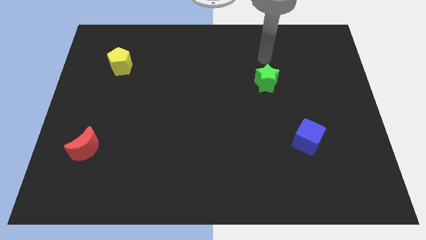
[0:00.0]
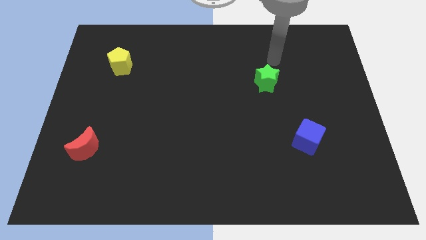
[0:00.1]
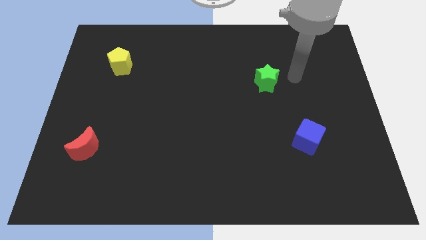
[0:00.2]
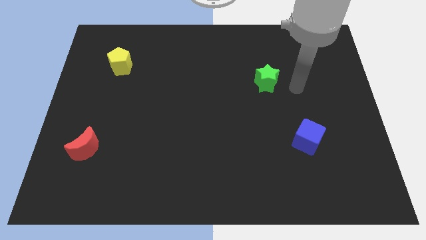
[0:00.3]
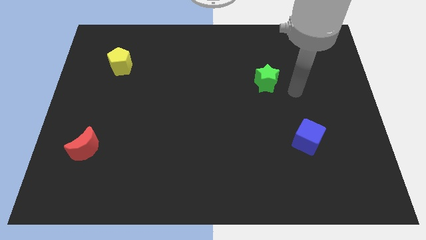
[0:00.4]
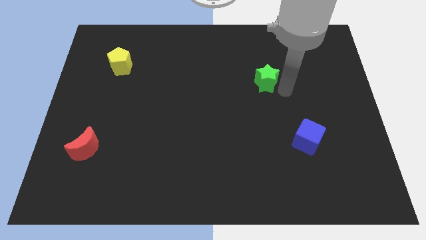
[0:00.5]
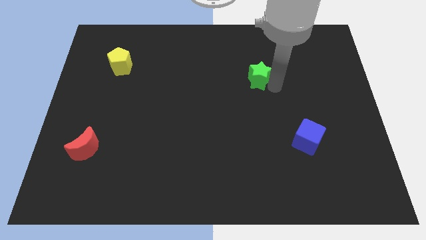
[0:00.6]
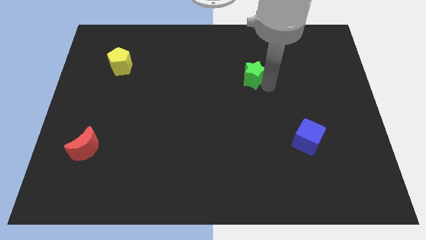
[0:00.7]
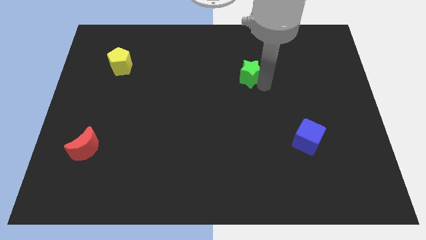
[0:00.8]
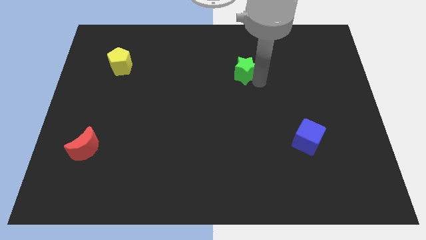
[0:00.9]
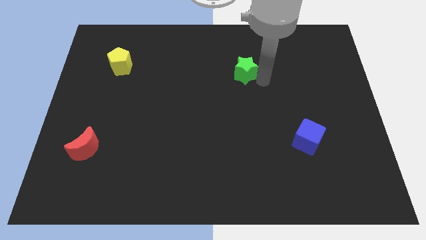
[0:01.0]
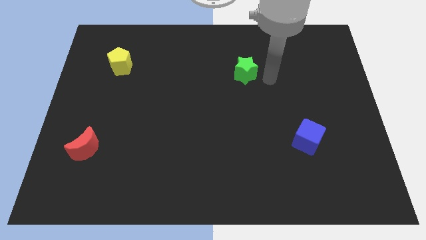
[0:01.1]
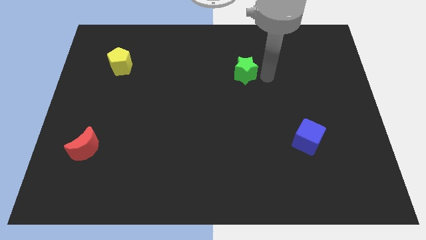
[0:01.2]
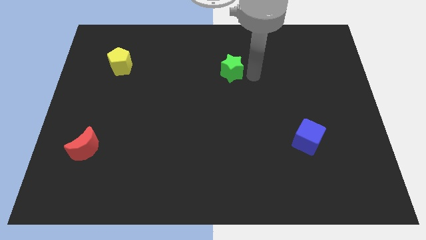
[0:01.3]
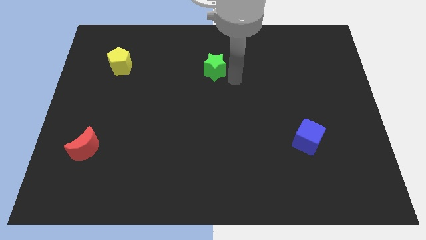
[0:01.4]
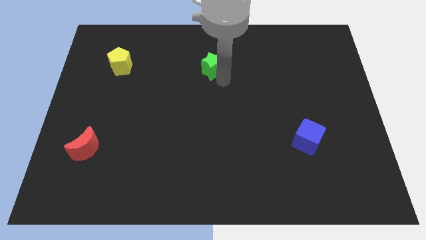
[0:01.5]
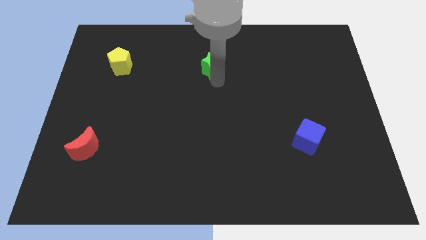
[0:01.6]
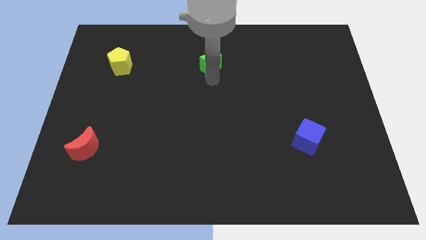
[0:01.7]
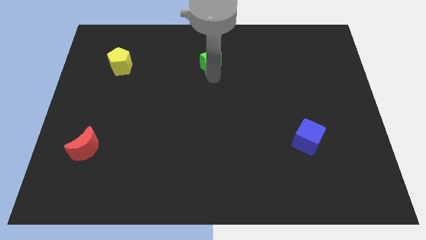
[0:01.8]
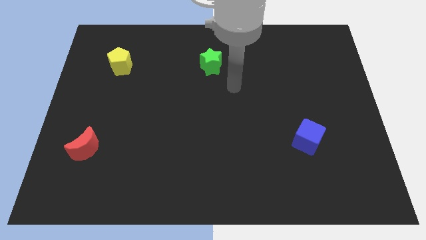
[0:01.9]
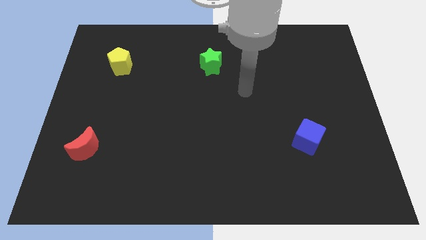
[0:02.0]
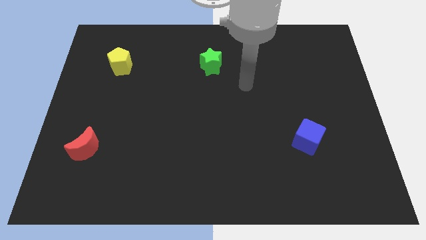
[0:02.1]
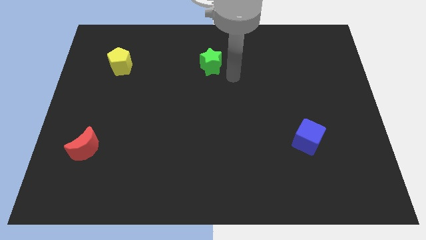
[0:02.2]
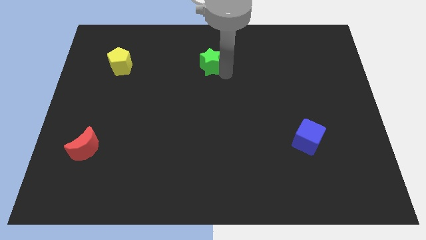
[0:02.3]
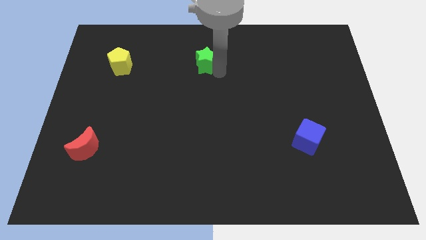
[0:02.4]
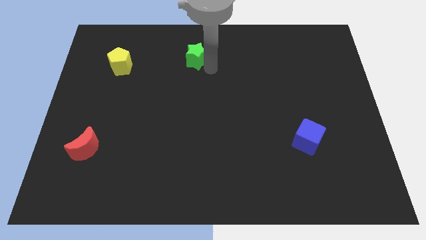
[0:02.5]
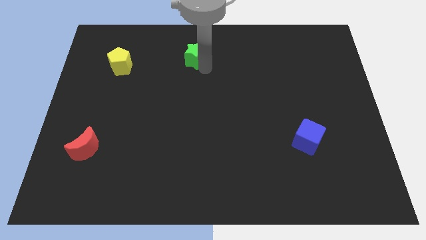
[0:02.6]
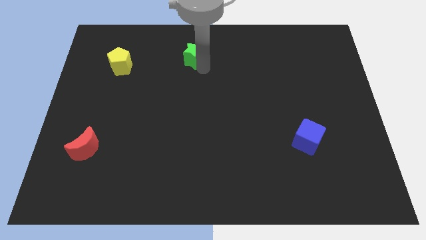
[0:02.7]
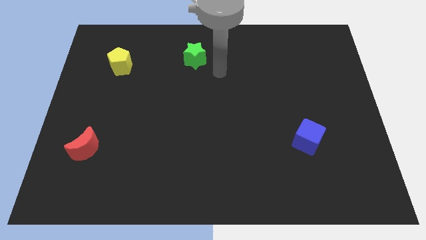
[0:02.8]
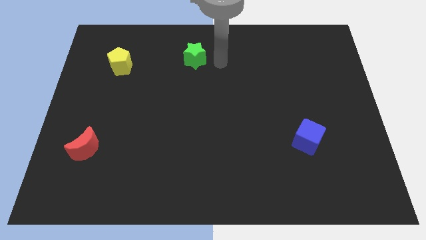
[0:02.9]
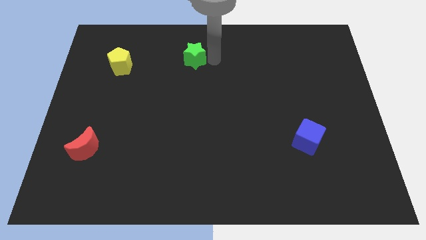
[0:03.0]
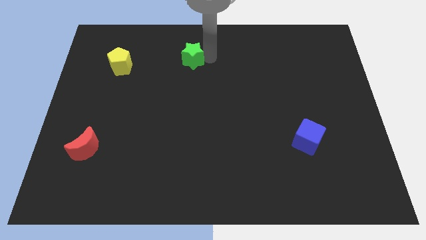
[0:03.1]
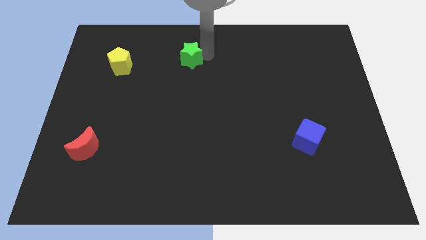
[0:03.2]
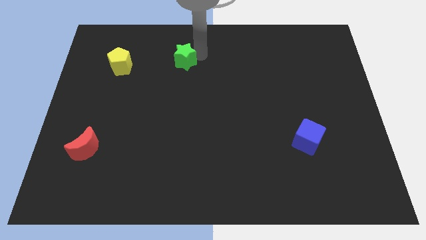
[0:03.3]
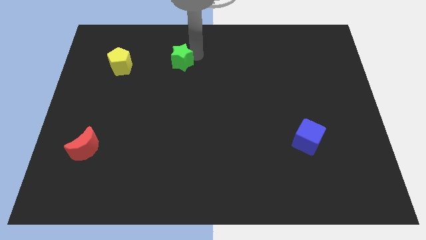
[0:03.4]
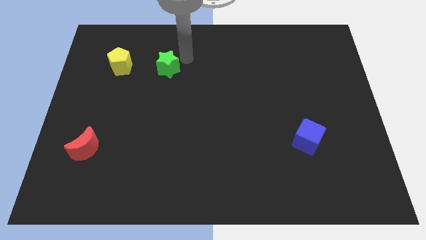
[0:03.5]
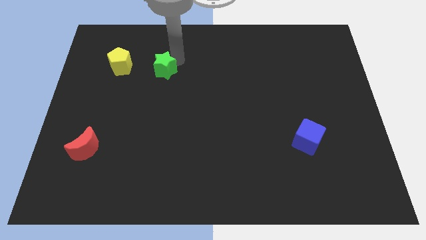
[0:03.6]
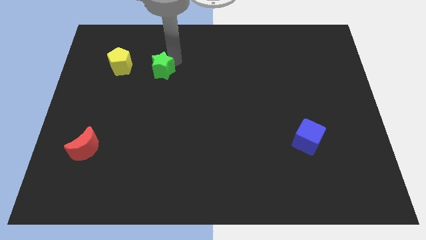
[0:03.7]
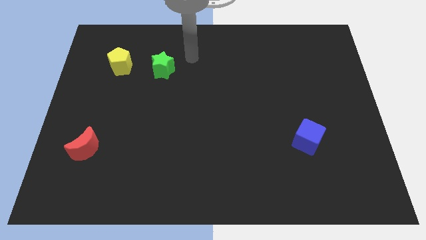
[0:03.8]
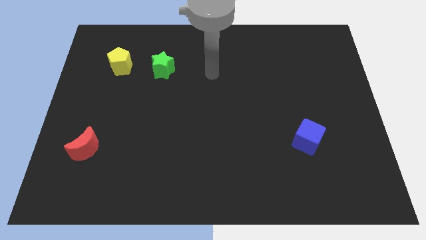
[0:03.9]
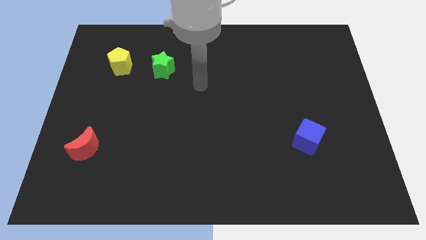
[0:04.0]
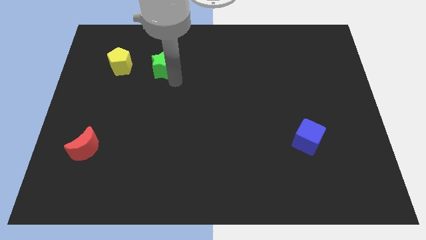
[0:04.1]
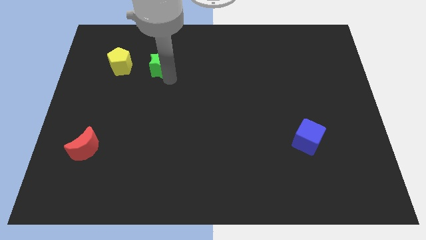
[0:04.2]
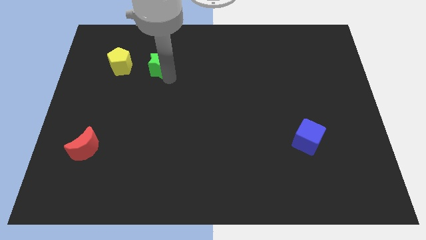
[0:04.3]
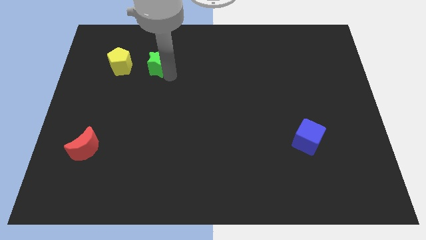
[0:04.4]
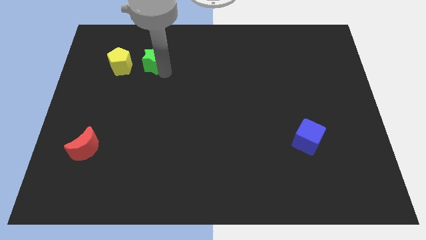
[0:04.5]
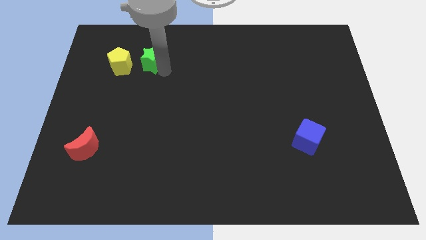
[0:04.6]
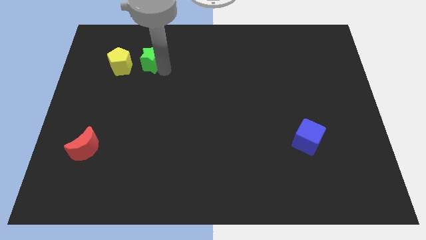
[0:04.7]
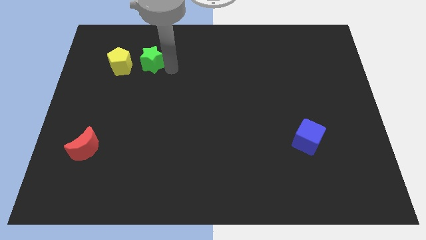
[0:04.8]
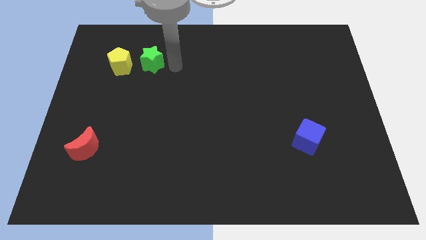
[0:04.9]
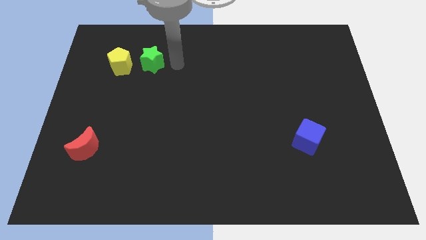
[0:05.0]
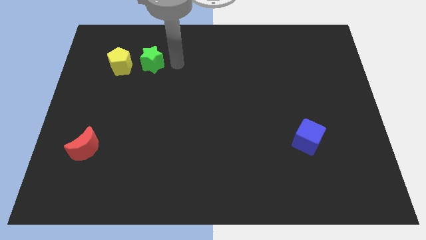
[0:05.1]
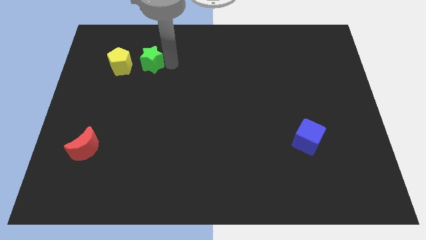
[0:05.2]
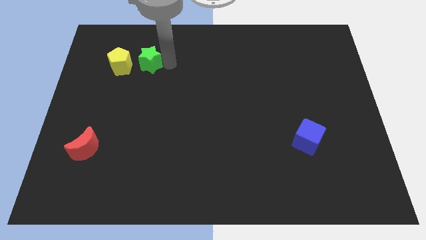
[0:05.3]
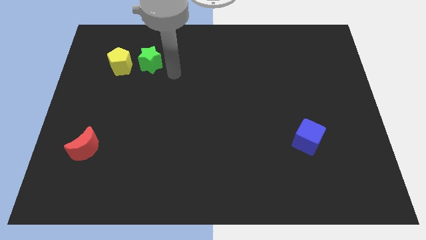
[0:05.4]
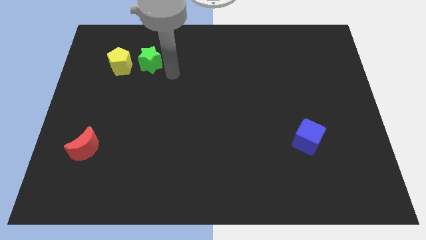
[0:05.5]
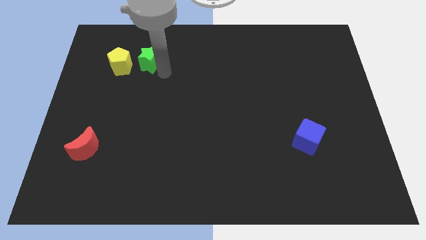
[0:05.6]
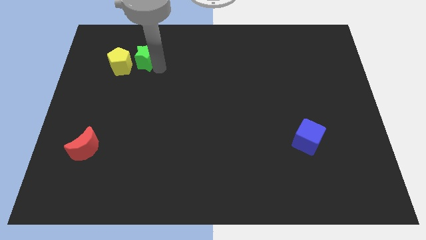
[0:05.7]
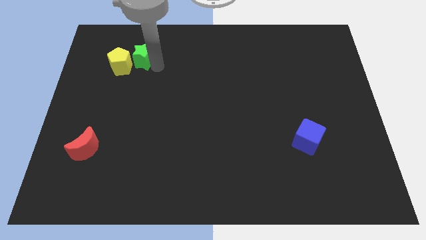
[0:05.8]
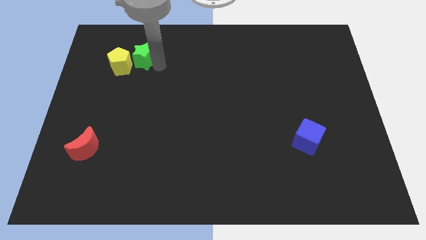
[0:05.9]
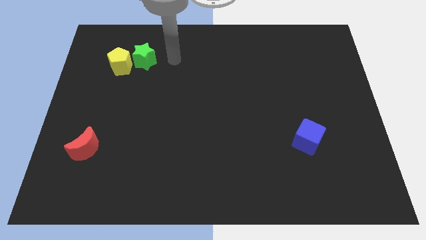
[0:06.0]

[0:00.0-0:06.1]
slide the star next to the yellow pentagon

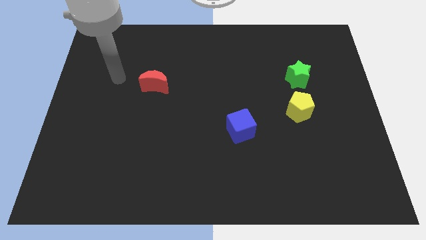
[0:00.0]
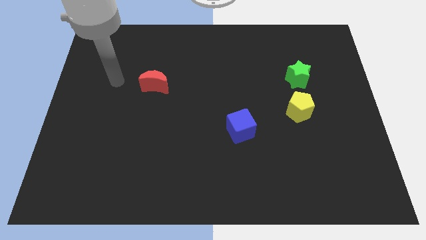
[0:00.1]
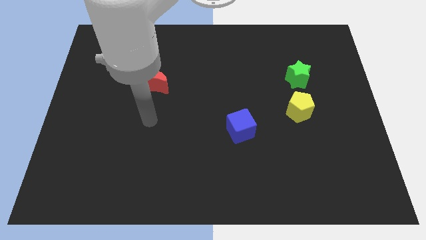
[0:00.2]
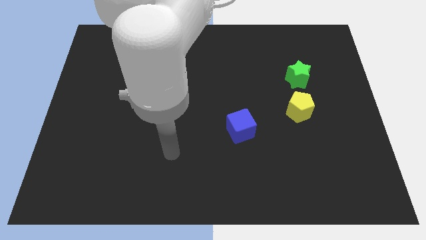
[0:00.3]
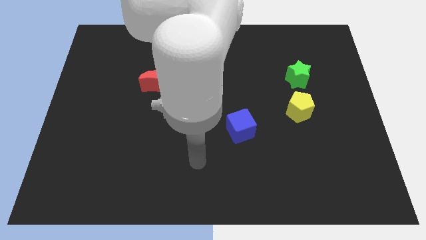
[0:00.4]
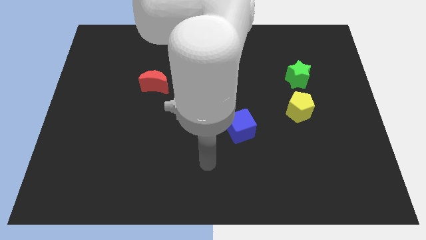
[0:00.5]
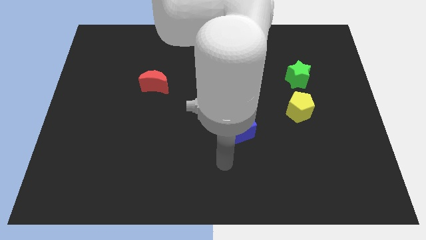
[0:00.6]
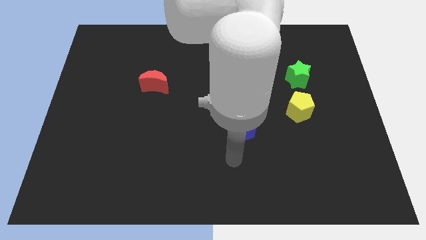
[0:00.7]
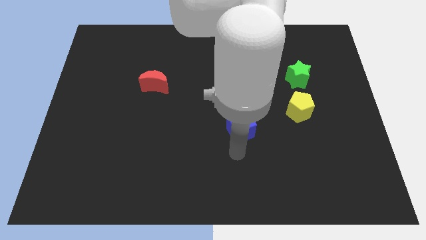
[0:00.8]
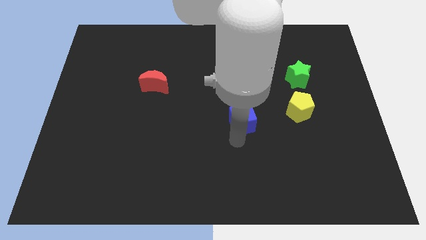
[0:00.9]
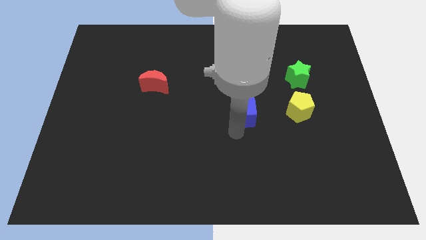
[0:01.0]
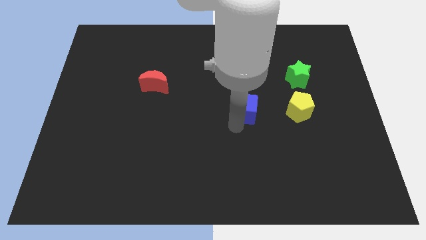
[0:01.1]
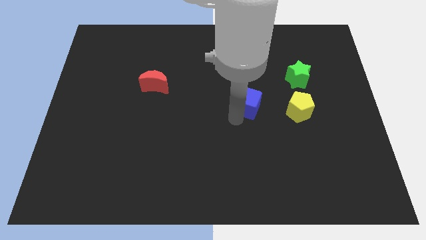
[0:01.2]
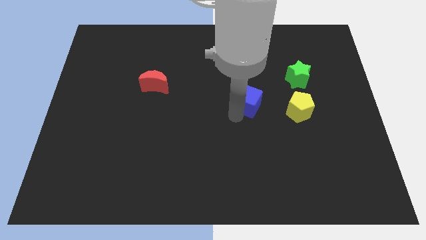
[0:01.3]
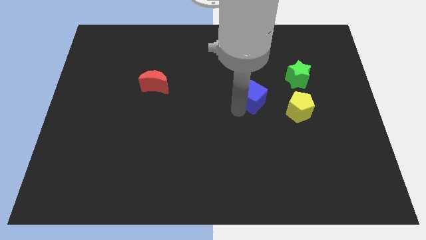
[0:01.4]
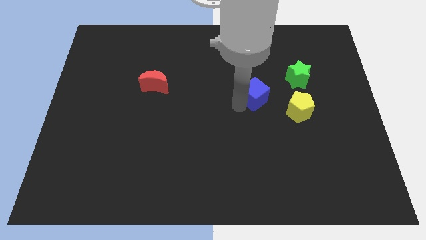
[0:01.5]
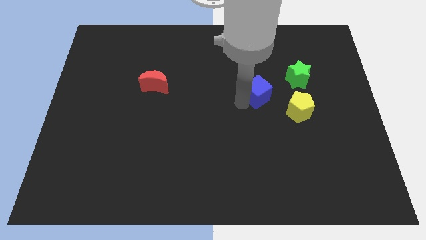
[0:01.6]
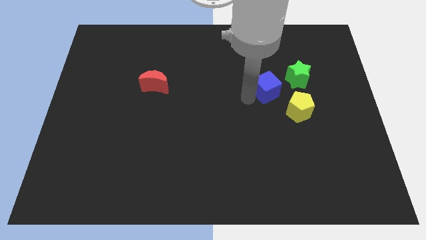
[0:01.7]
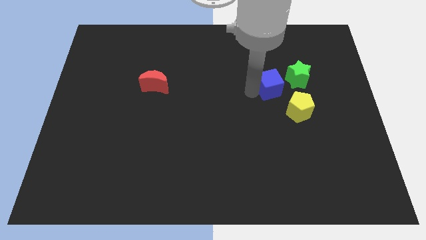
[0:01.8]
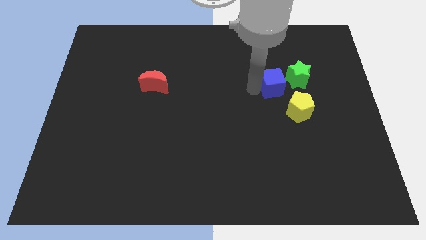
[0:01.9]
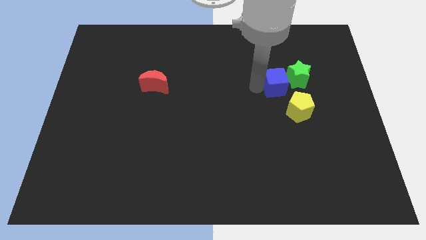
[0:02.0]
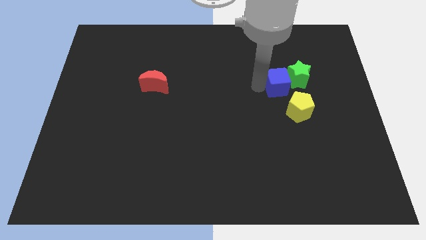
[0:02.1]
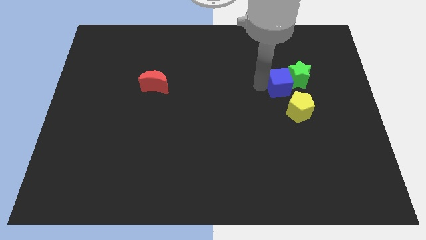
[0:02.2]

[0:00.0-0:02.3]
slide the blue block towards the star
